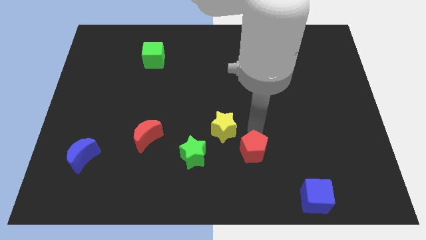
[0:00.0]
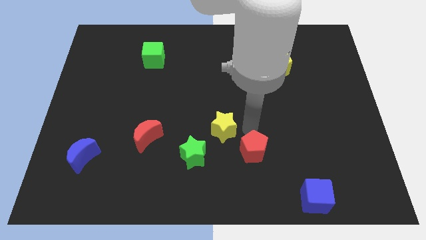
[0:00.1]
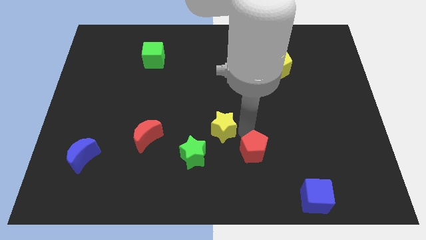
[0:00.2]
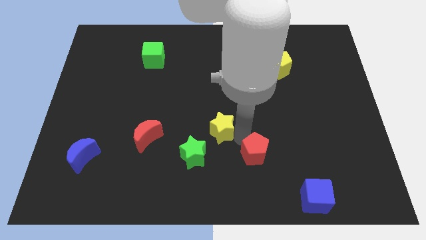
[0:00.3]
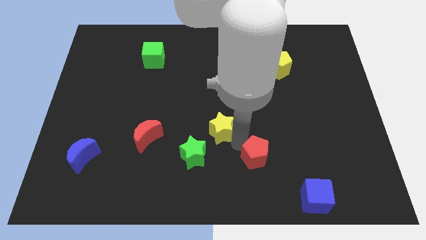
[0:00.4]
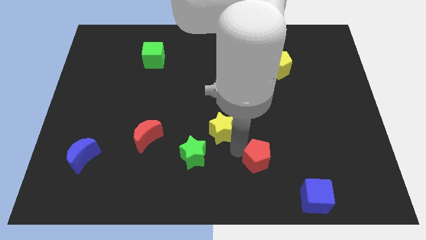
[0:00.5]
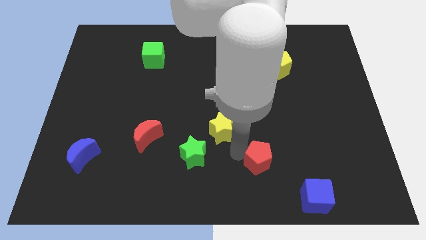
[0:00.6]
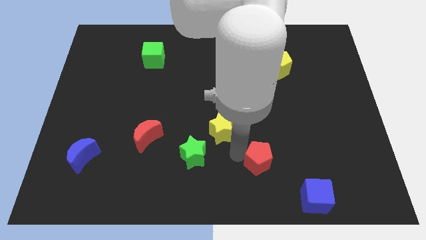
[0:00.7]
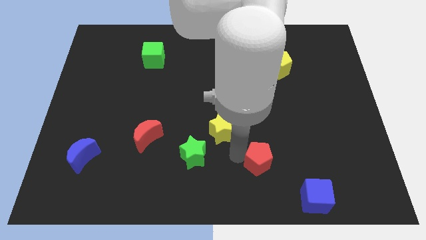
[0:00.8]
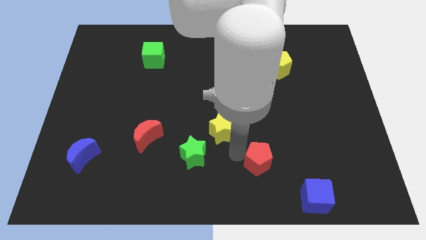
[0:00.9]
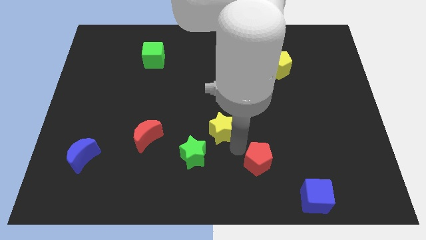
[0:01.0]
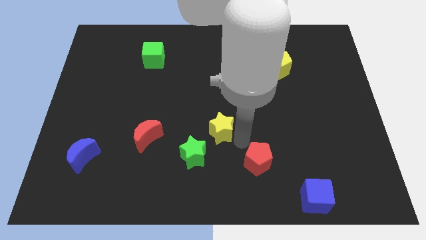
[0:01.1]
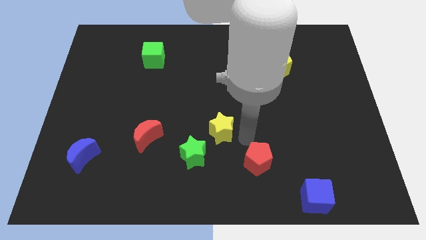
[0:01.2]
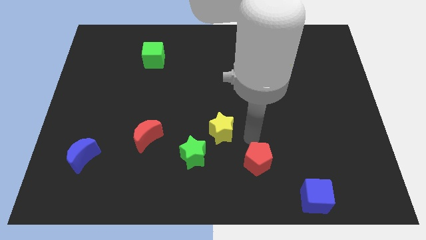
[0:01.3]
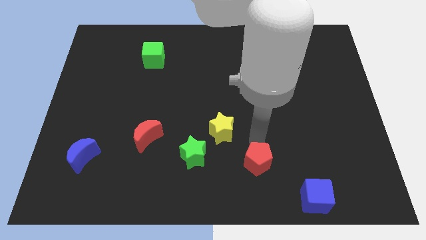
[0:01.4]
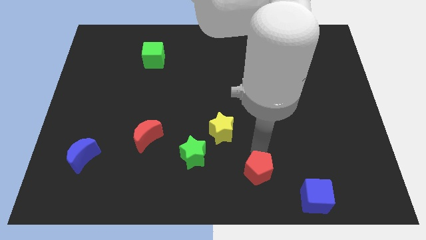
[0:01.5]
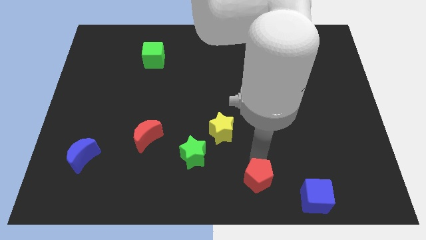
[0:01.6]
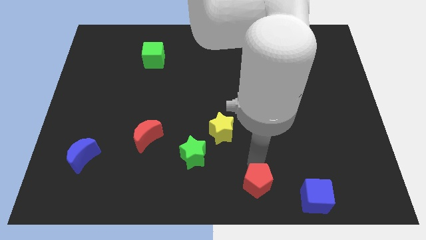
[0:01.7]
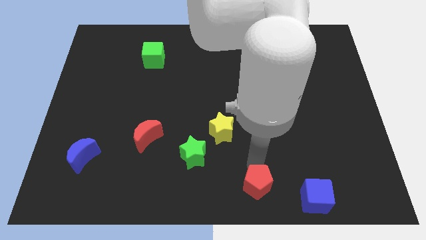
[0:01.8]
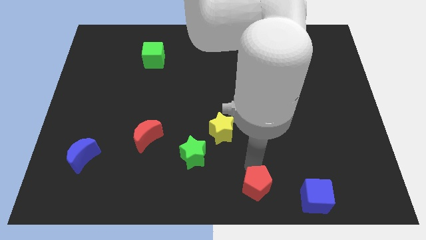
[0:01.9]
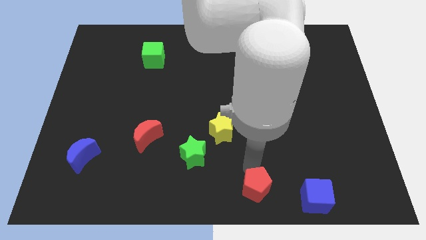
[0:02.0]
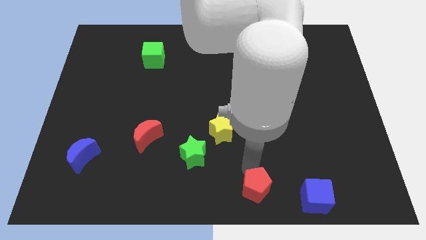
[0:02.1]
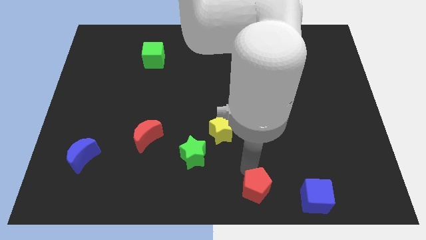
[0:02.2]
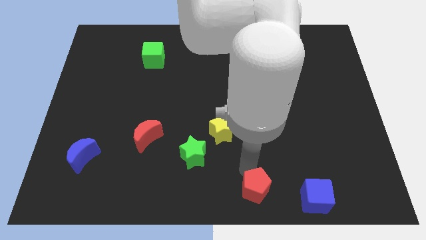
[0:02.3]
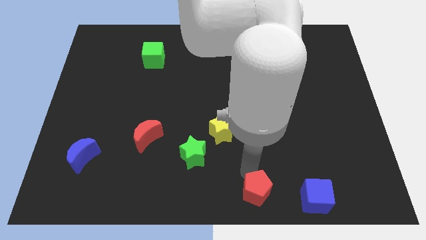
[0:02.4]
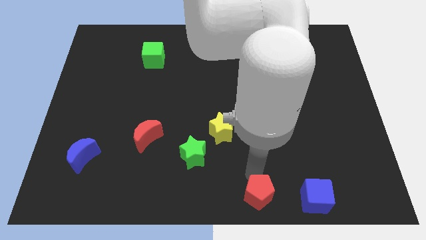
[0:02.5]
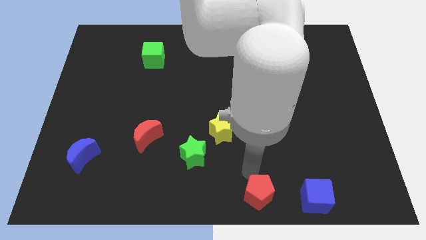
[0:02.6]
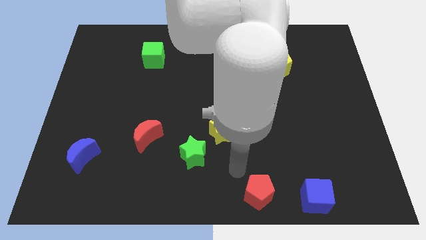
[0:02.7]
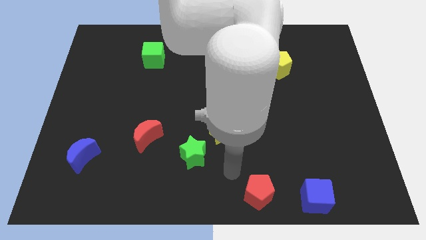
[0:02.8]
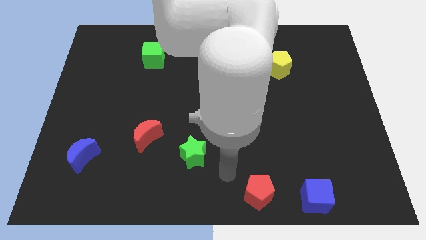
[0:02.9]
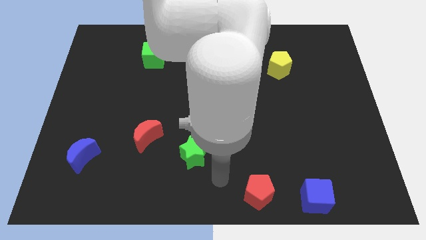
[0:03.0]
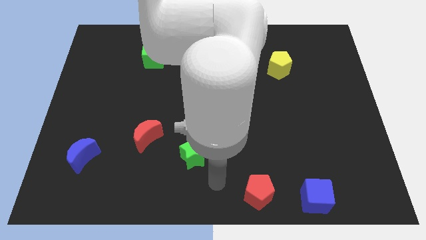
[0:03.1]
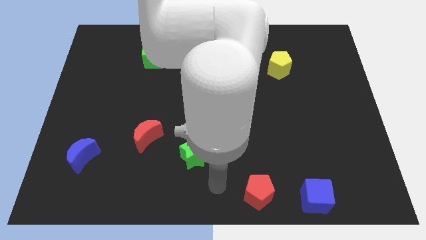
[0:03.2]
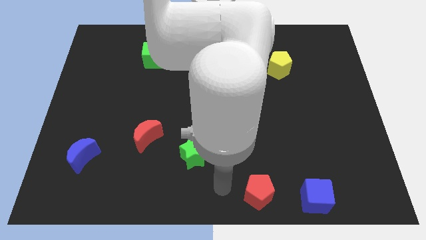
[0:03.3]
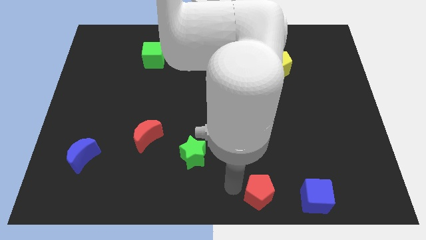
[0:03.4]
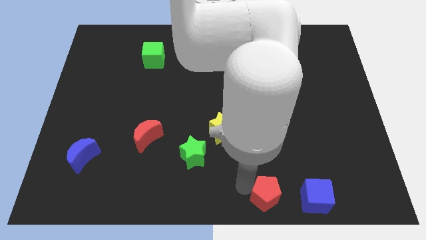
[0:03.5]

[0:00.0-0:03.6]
move the red pentagon bottom center of the board

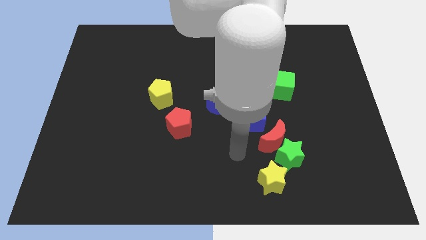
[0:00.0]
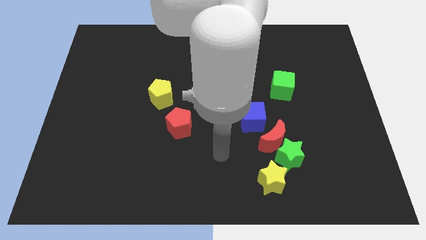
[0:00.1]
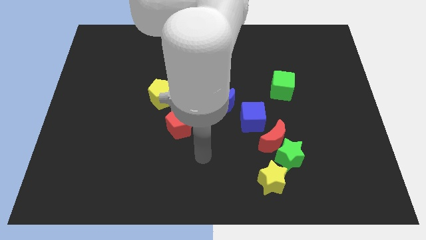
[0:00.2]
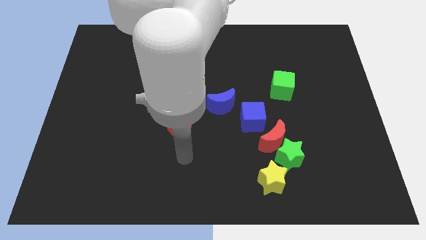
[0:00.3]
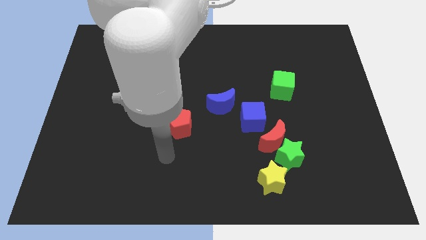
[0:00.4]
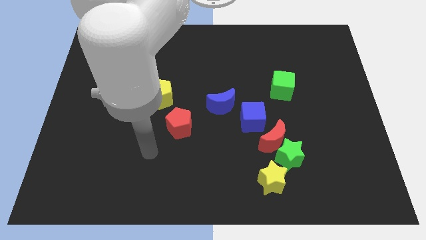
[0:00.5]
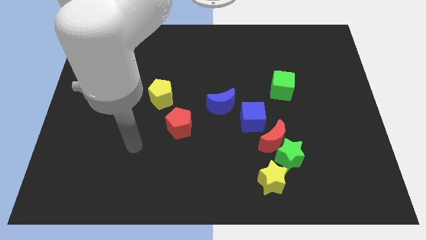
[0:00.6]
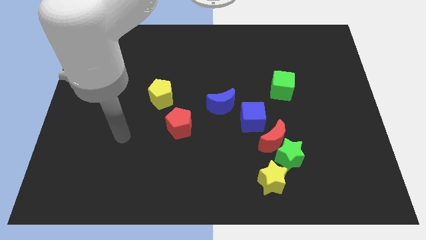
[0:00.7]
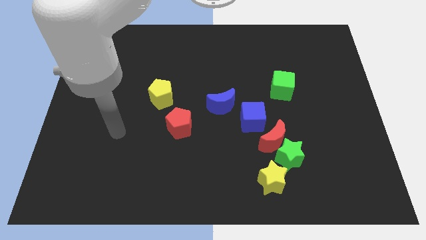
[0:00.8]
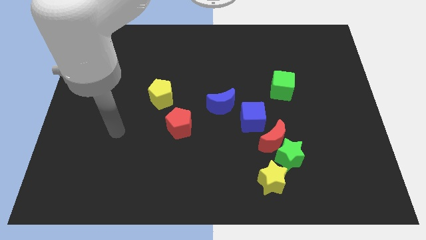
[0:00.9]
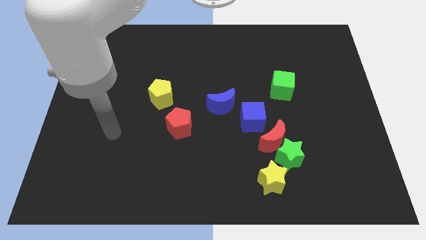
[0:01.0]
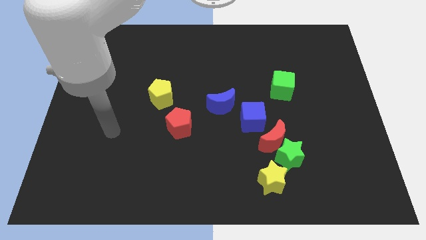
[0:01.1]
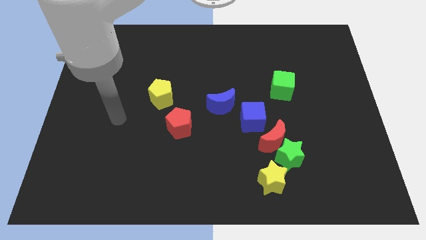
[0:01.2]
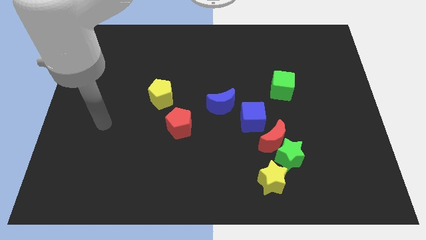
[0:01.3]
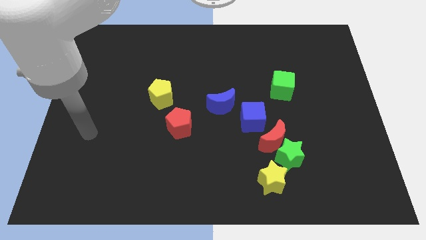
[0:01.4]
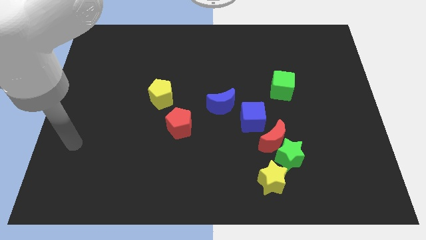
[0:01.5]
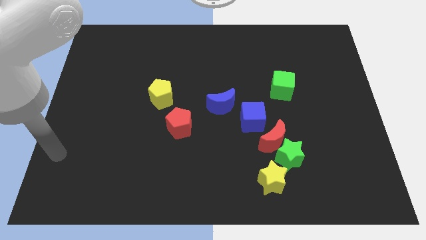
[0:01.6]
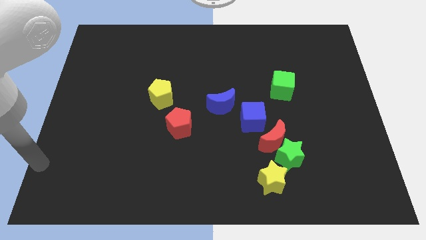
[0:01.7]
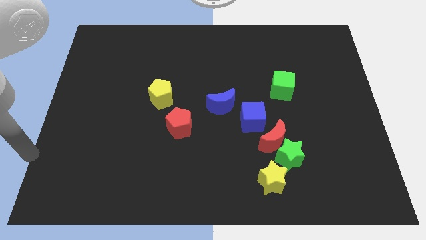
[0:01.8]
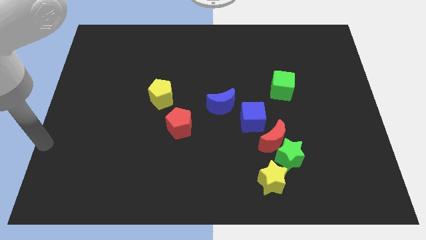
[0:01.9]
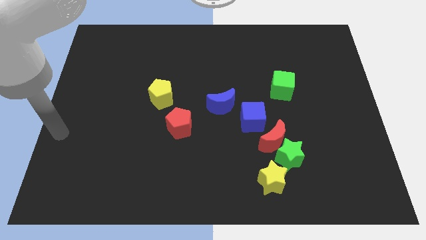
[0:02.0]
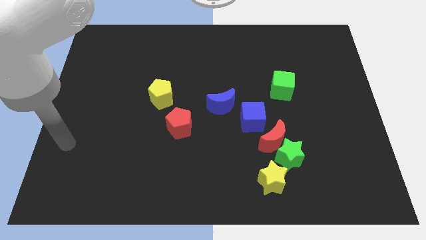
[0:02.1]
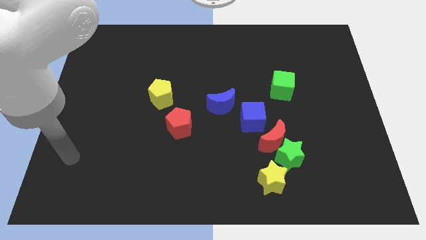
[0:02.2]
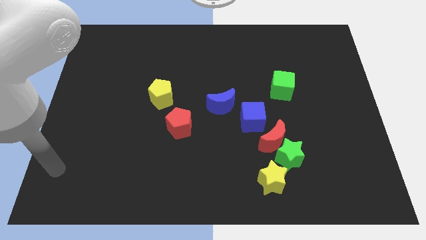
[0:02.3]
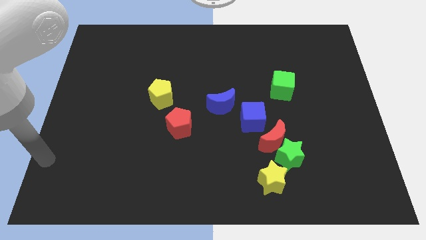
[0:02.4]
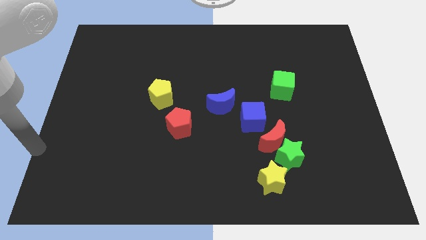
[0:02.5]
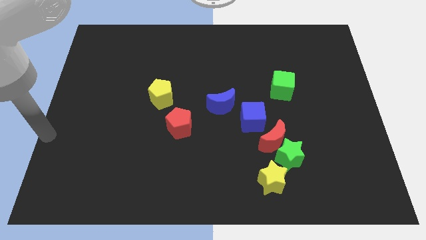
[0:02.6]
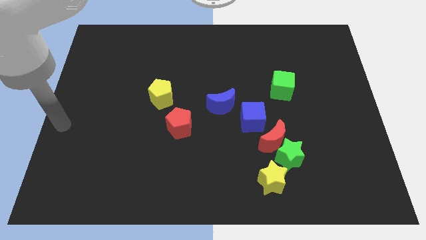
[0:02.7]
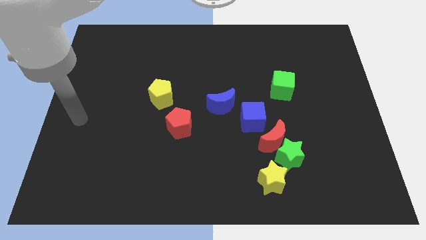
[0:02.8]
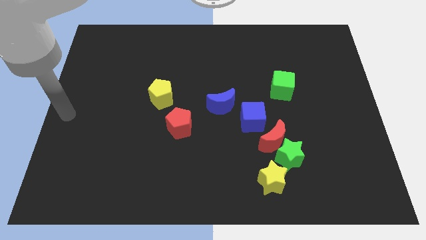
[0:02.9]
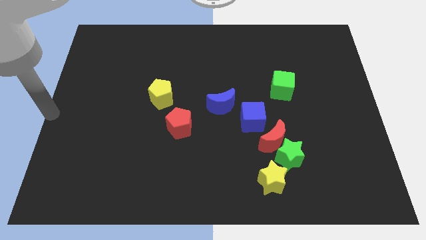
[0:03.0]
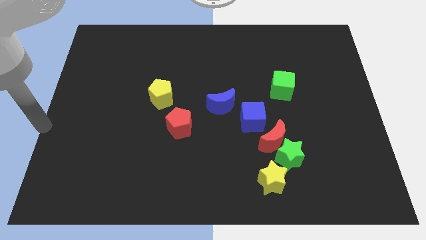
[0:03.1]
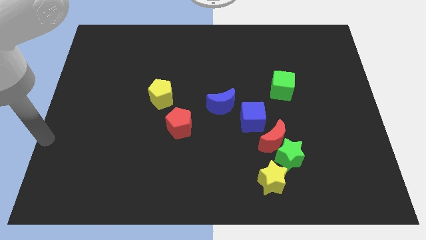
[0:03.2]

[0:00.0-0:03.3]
point your arm at the center left of the board

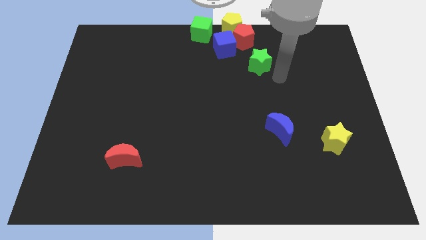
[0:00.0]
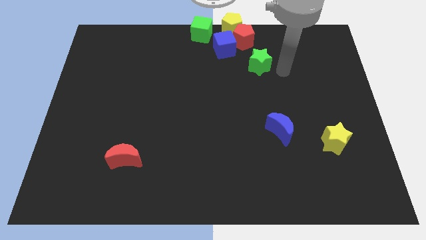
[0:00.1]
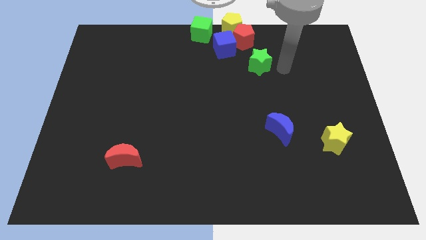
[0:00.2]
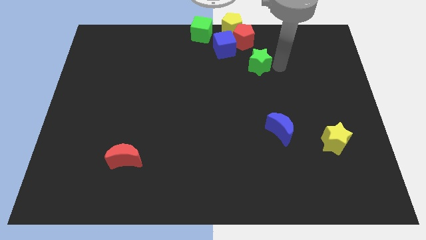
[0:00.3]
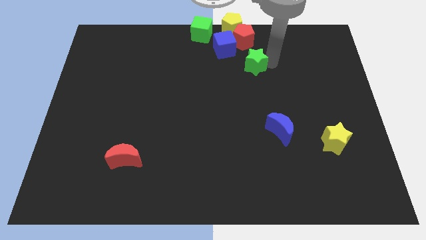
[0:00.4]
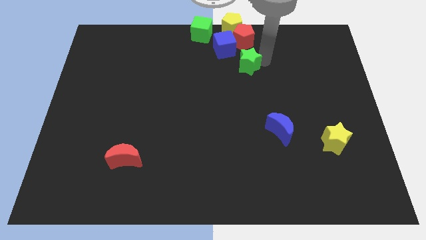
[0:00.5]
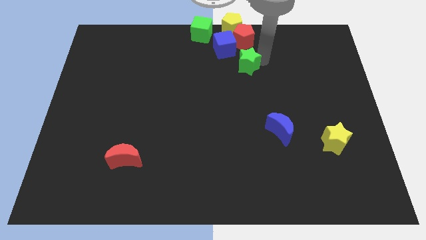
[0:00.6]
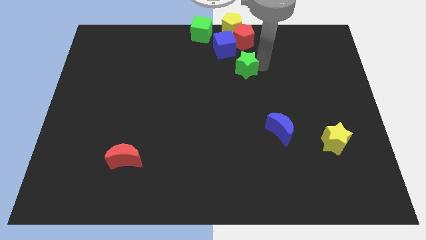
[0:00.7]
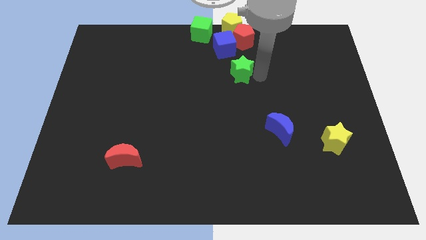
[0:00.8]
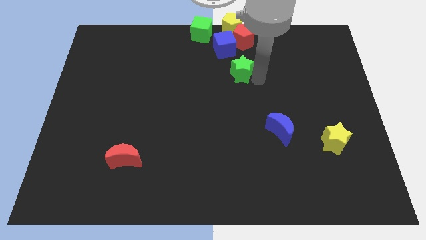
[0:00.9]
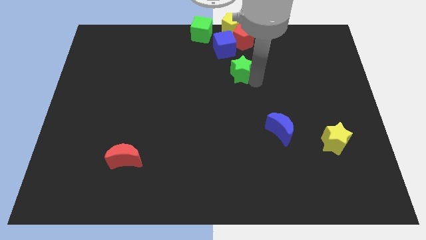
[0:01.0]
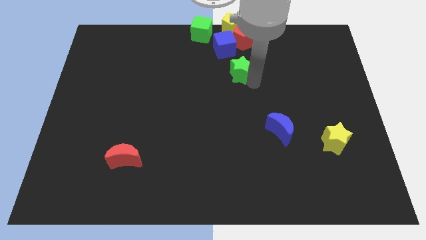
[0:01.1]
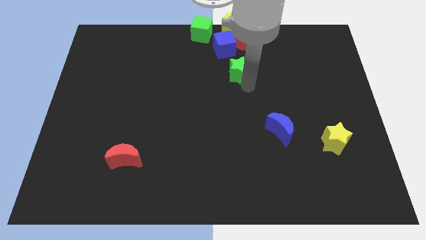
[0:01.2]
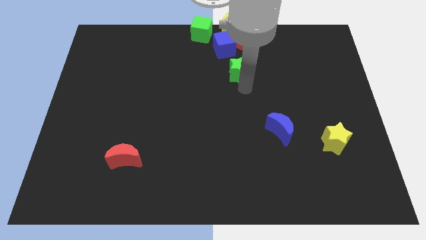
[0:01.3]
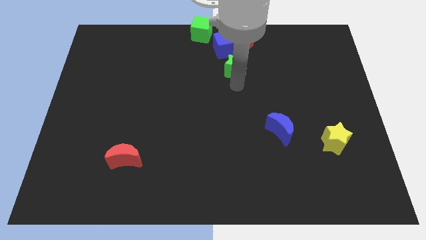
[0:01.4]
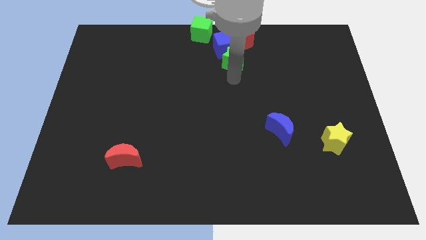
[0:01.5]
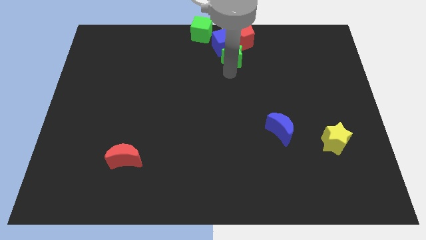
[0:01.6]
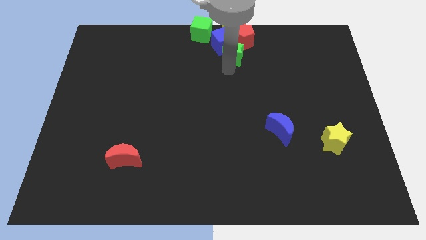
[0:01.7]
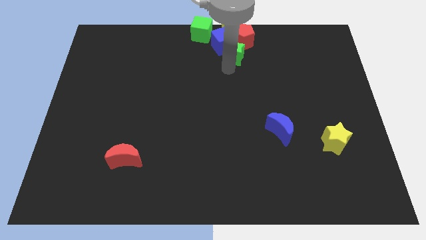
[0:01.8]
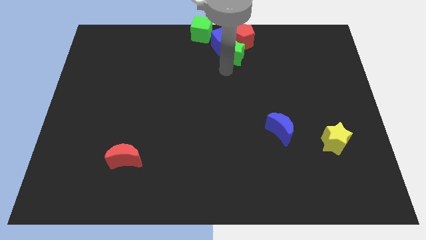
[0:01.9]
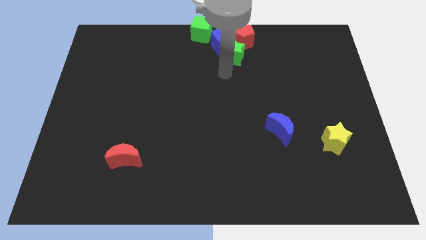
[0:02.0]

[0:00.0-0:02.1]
push the green cube below into blue cube
